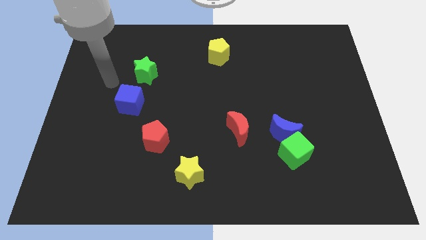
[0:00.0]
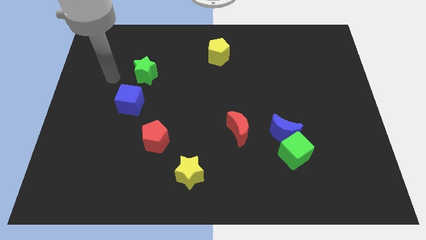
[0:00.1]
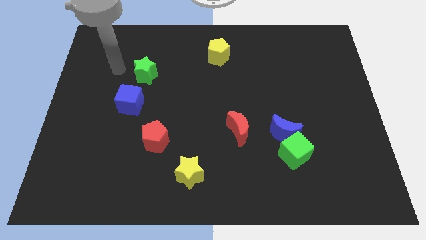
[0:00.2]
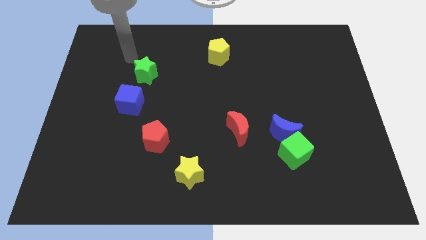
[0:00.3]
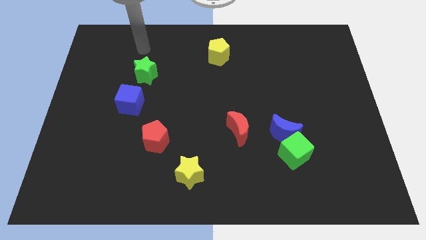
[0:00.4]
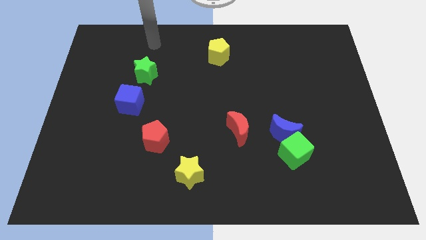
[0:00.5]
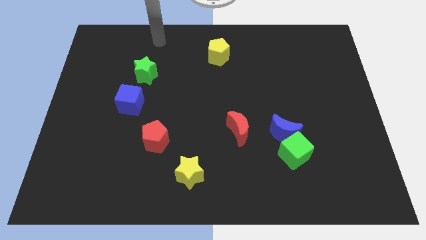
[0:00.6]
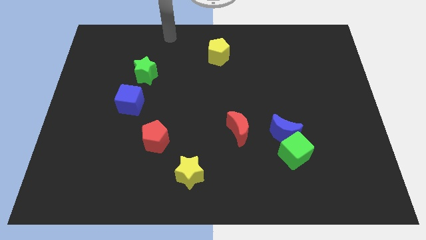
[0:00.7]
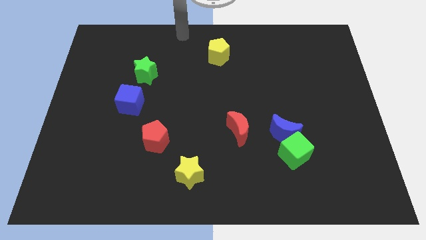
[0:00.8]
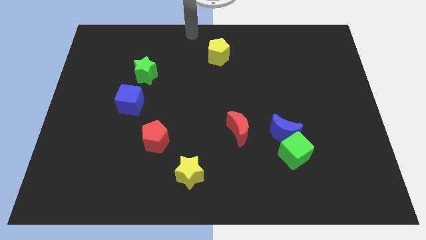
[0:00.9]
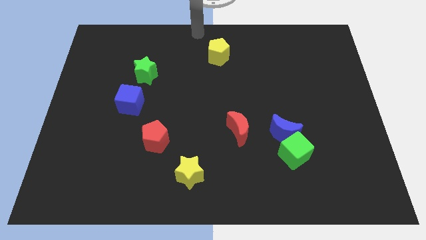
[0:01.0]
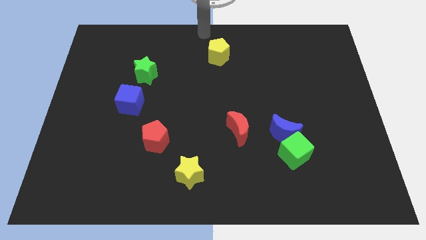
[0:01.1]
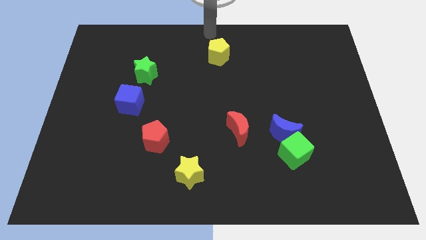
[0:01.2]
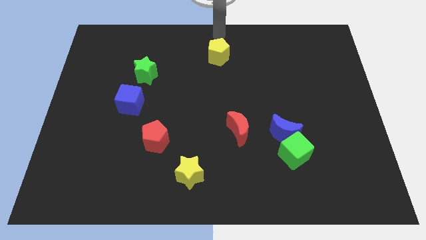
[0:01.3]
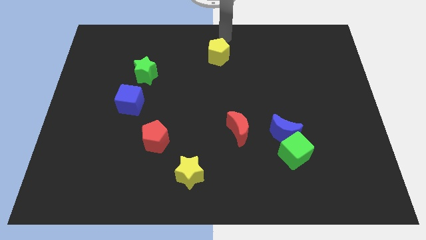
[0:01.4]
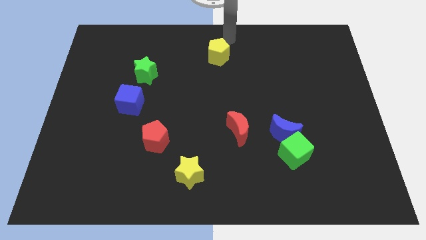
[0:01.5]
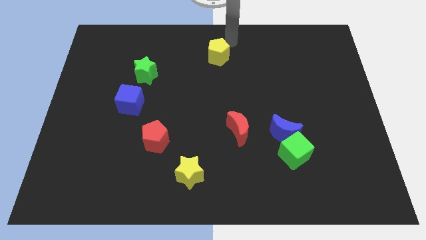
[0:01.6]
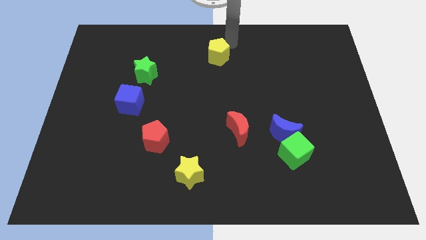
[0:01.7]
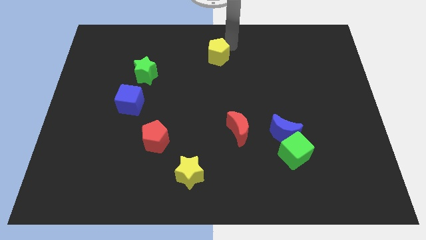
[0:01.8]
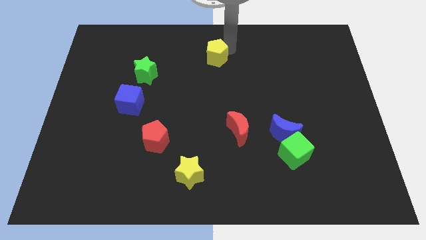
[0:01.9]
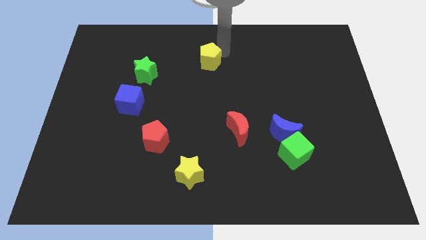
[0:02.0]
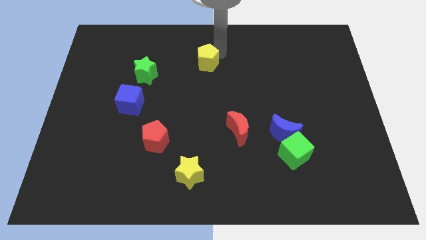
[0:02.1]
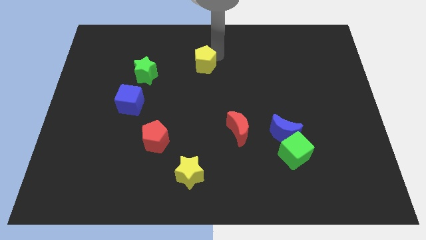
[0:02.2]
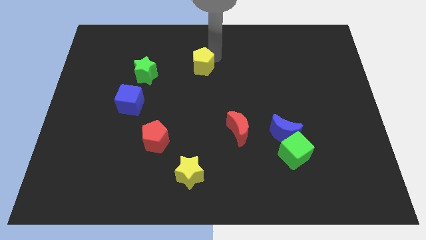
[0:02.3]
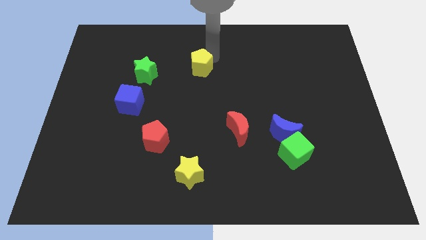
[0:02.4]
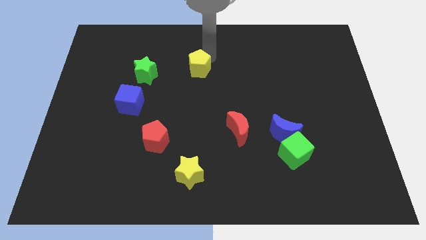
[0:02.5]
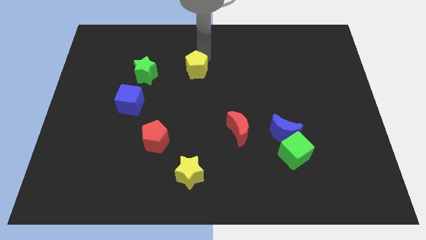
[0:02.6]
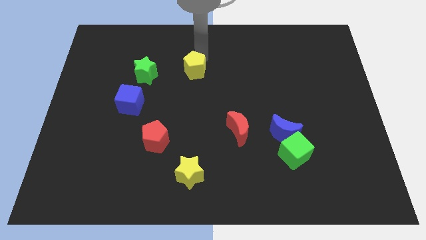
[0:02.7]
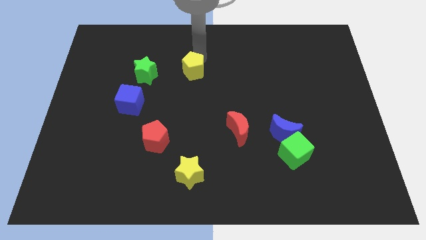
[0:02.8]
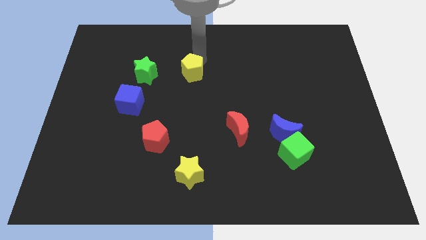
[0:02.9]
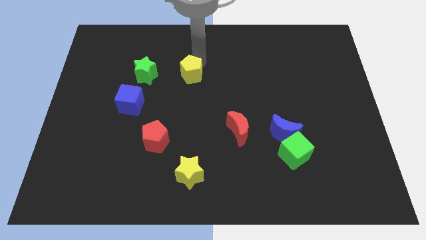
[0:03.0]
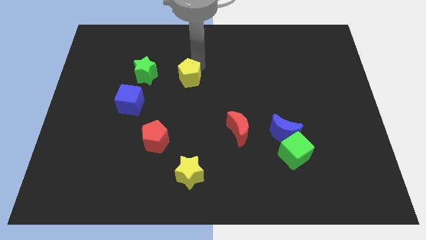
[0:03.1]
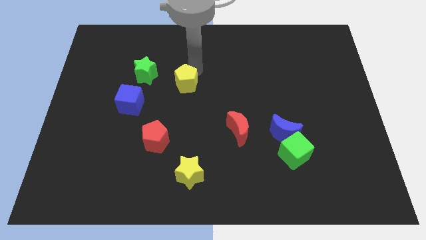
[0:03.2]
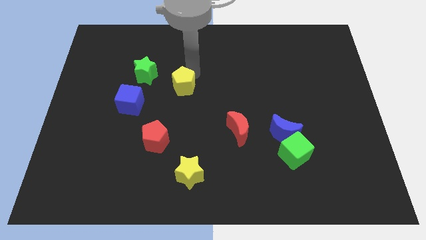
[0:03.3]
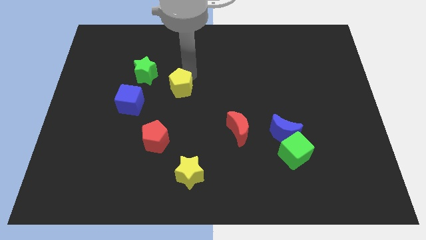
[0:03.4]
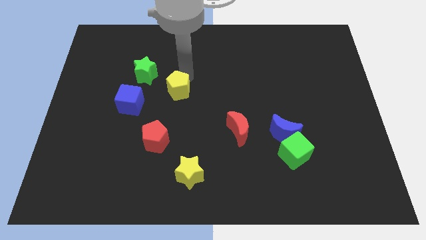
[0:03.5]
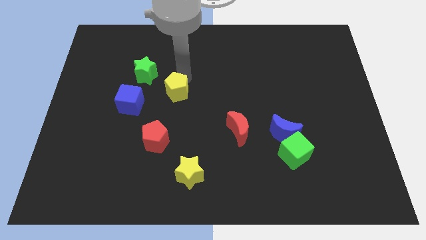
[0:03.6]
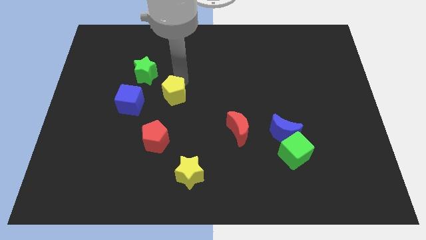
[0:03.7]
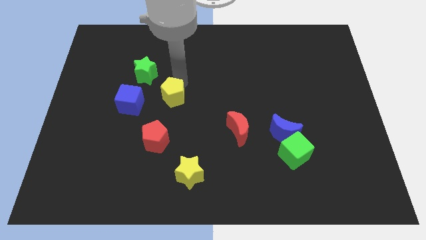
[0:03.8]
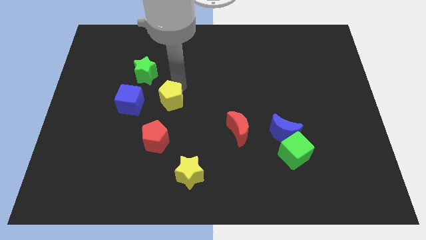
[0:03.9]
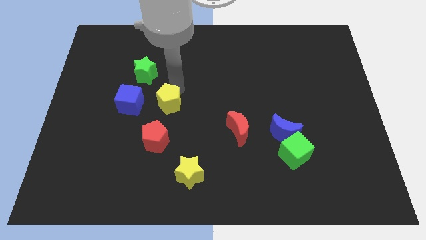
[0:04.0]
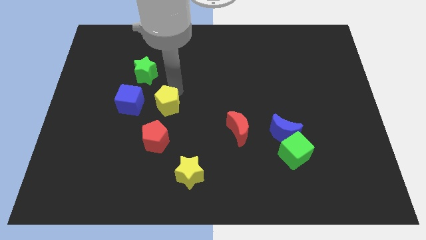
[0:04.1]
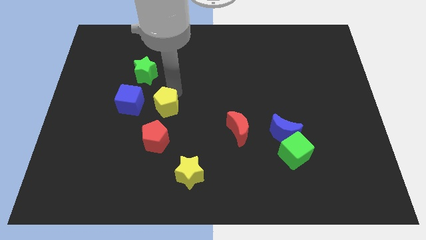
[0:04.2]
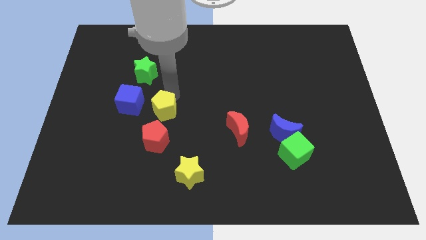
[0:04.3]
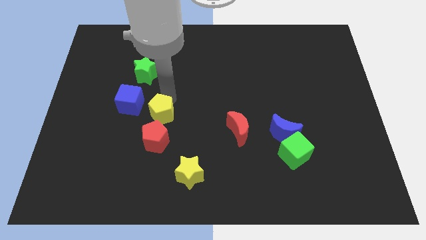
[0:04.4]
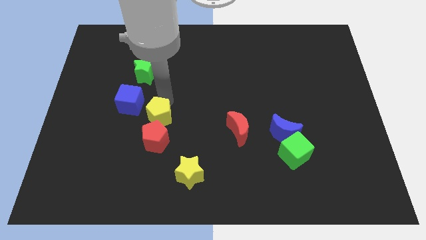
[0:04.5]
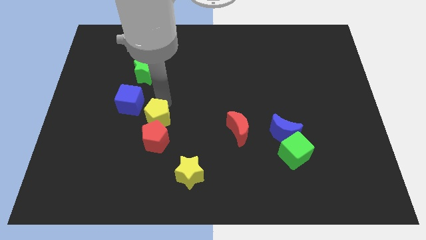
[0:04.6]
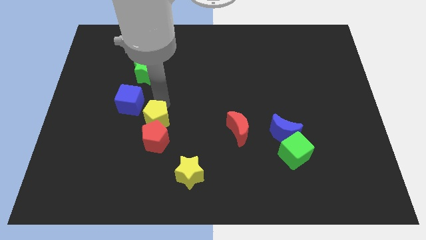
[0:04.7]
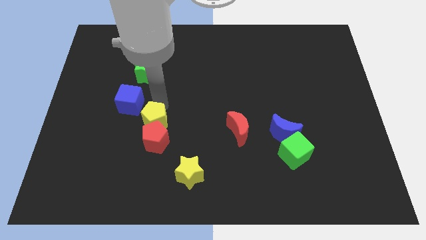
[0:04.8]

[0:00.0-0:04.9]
push the yellow pentagon close to the red pentagon

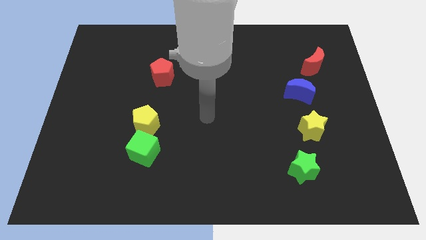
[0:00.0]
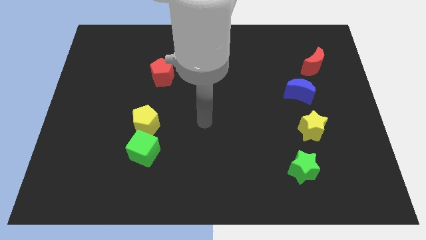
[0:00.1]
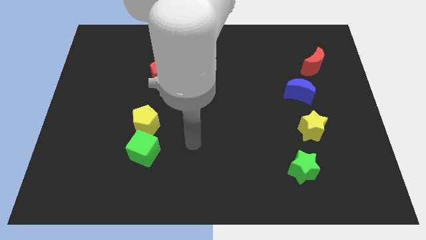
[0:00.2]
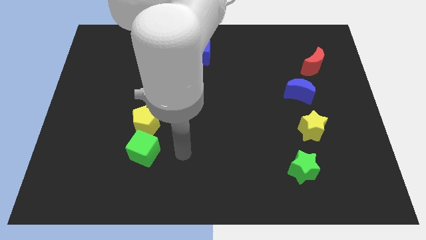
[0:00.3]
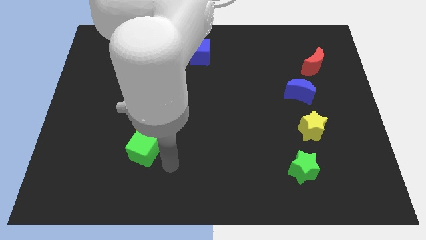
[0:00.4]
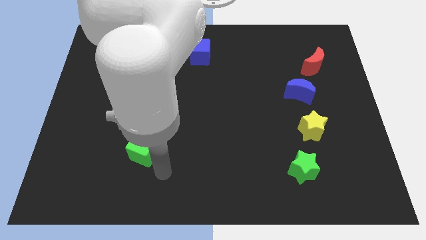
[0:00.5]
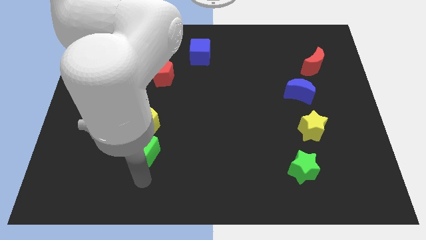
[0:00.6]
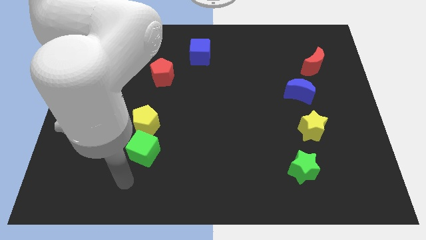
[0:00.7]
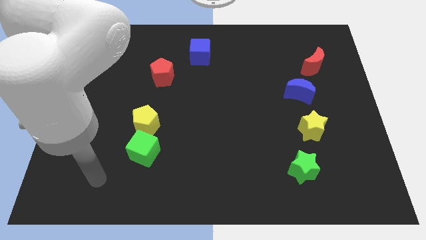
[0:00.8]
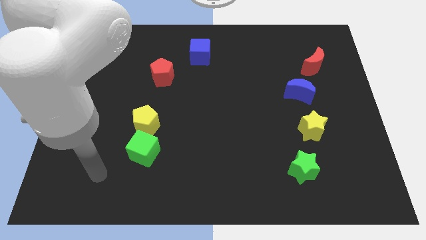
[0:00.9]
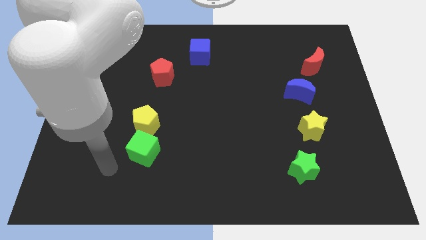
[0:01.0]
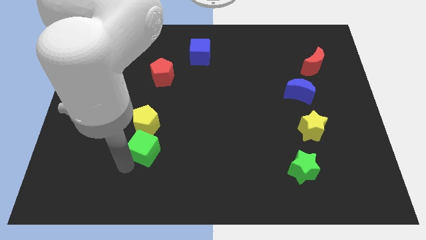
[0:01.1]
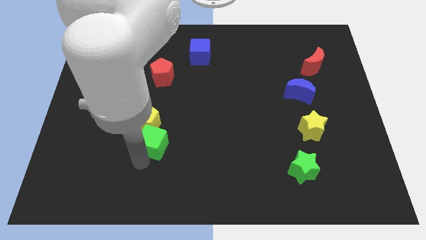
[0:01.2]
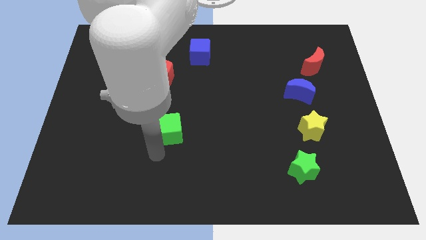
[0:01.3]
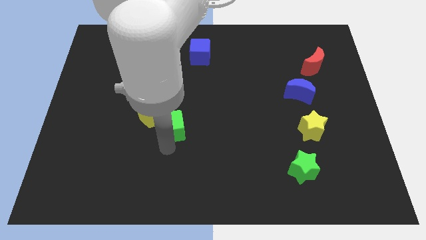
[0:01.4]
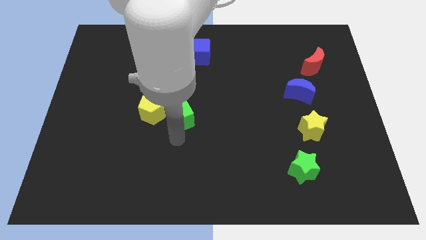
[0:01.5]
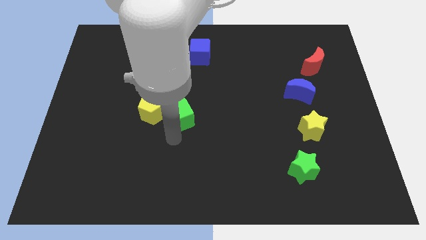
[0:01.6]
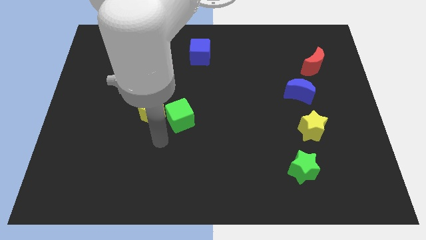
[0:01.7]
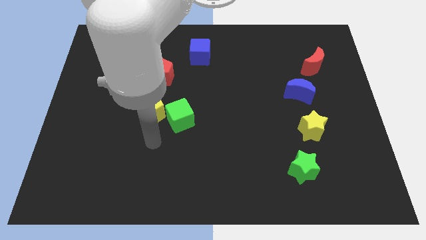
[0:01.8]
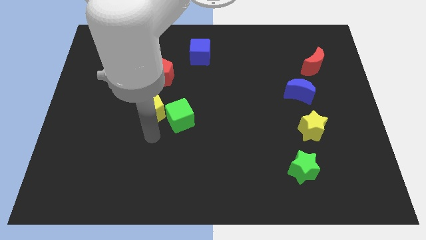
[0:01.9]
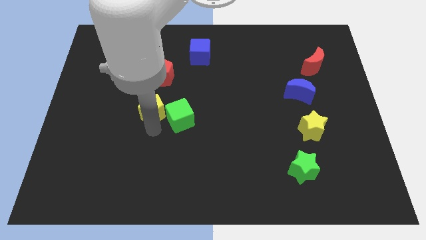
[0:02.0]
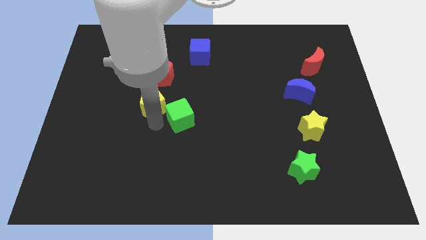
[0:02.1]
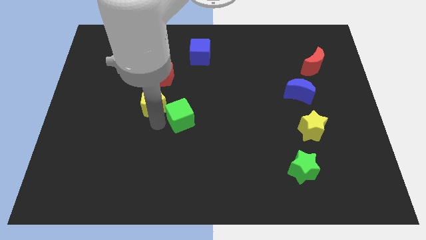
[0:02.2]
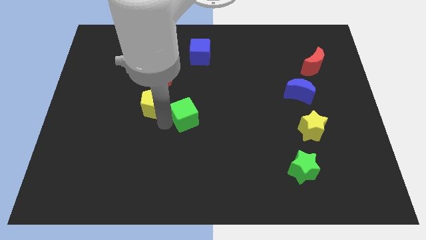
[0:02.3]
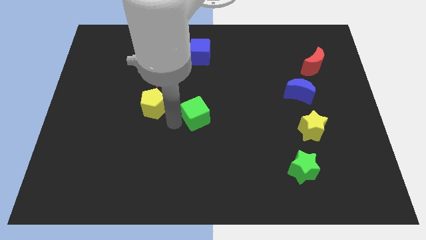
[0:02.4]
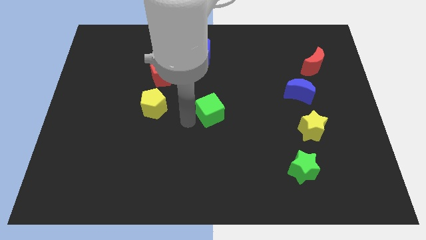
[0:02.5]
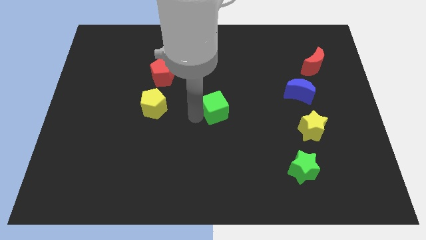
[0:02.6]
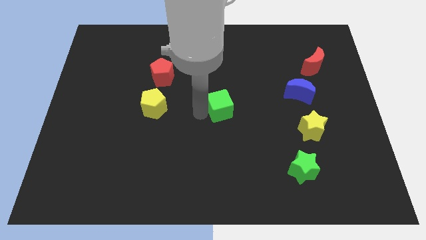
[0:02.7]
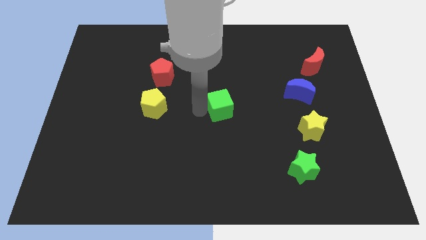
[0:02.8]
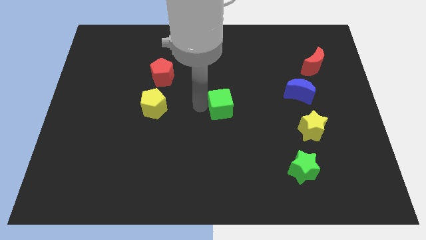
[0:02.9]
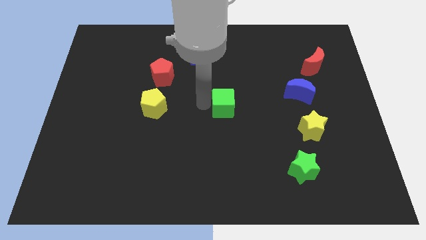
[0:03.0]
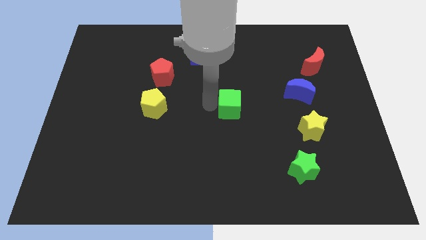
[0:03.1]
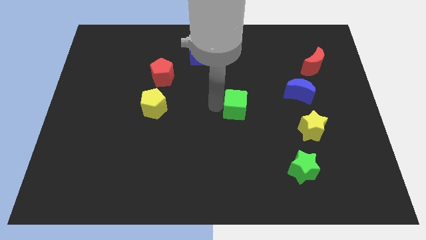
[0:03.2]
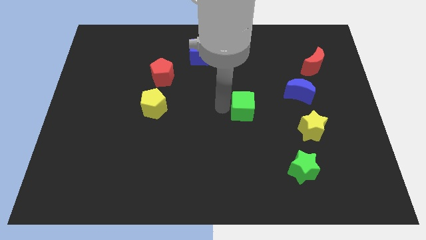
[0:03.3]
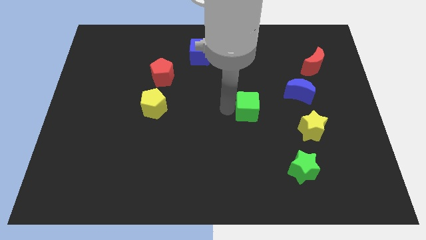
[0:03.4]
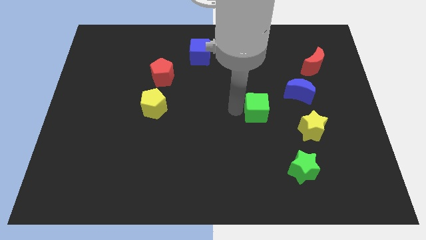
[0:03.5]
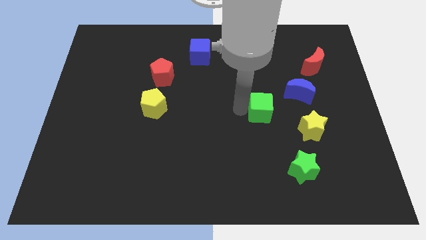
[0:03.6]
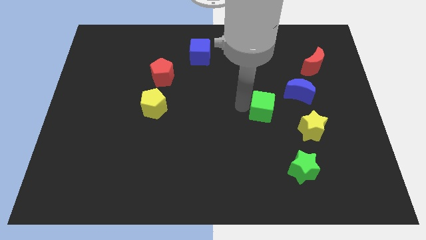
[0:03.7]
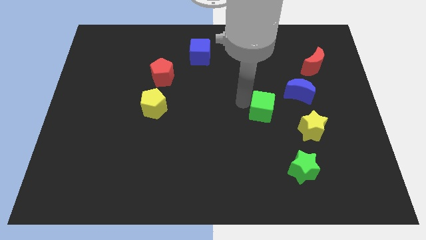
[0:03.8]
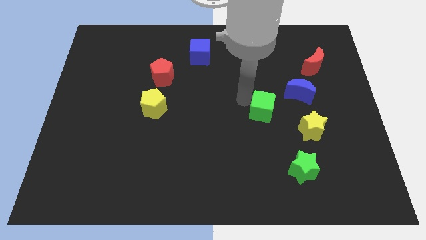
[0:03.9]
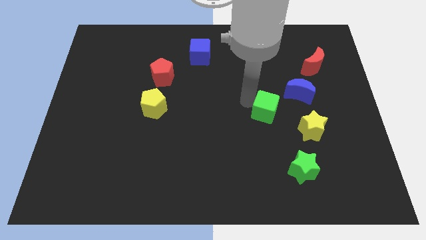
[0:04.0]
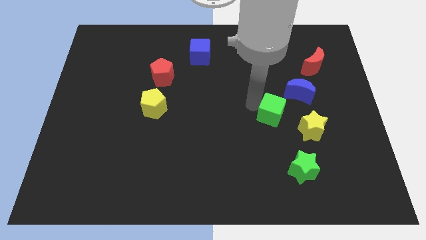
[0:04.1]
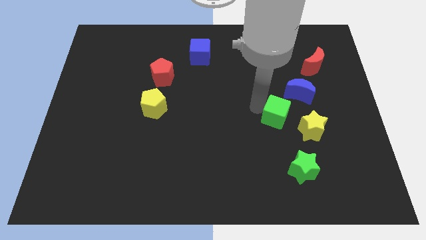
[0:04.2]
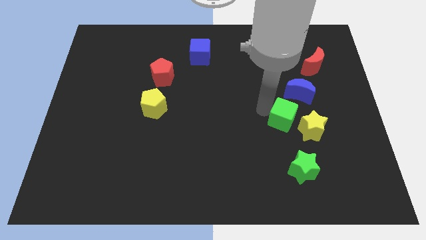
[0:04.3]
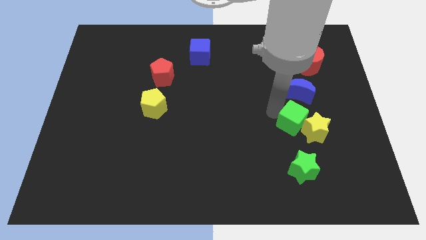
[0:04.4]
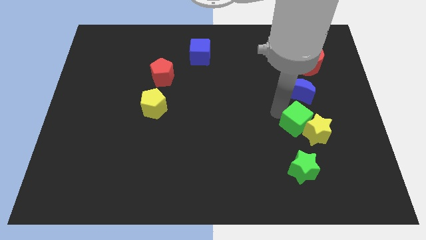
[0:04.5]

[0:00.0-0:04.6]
push the green cube to the yellow star
